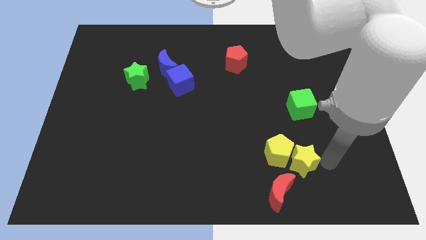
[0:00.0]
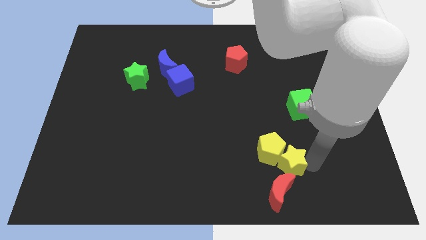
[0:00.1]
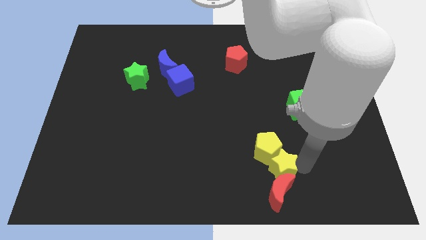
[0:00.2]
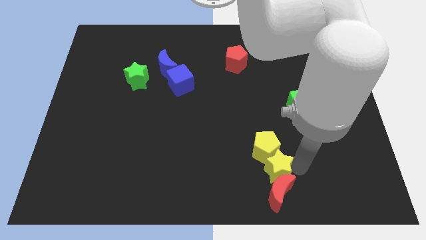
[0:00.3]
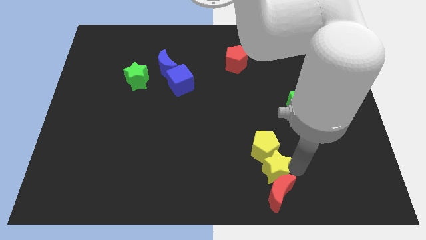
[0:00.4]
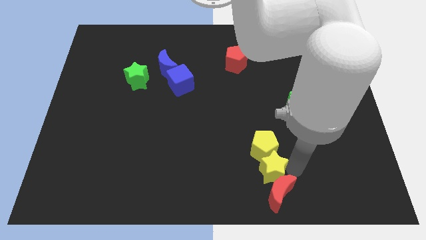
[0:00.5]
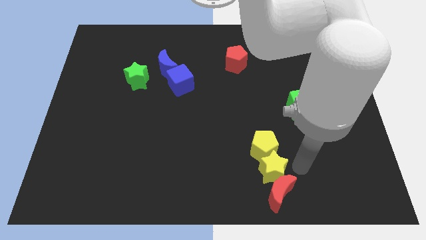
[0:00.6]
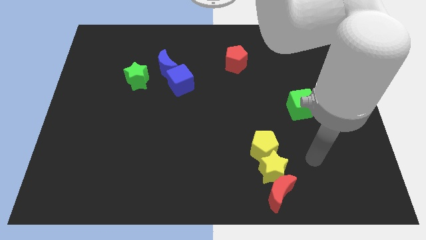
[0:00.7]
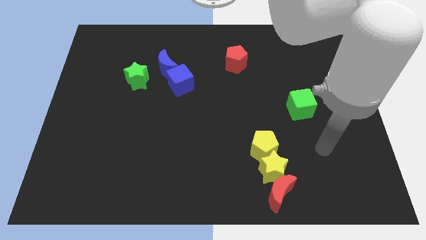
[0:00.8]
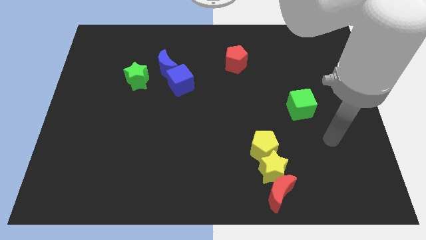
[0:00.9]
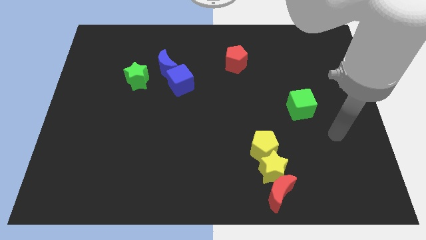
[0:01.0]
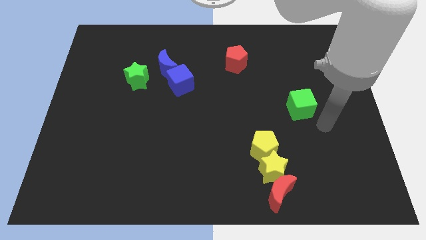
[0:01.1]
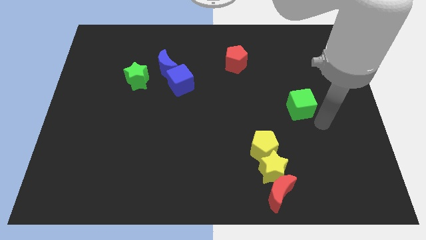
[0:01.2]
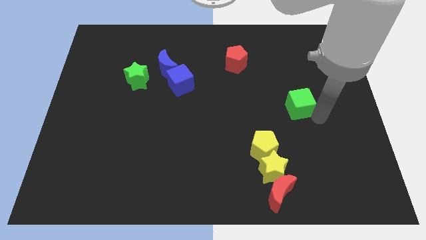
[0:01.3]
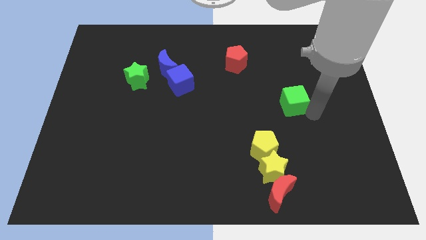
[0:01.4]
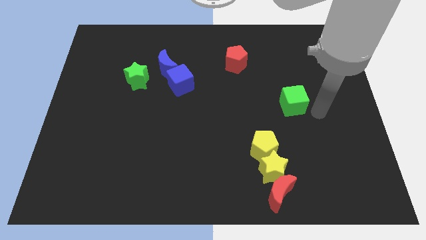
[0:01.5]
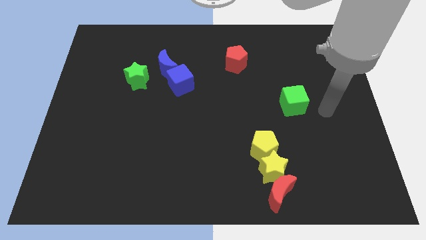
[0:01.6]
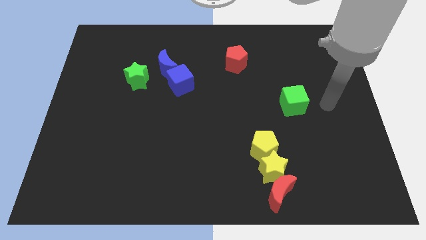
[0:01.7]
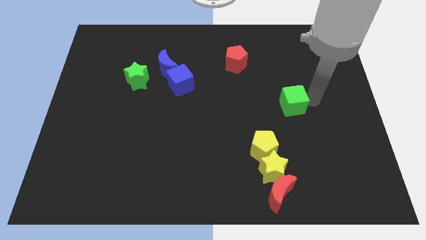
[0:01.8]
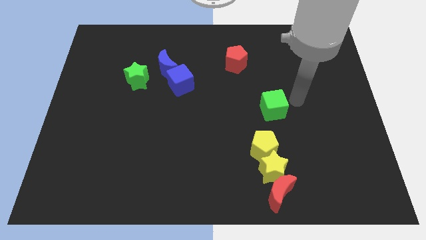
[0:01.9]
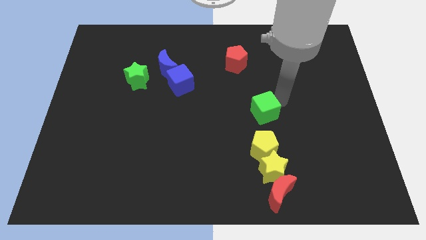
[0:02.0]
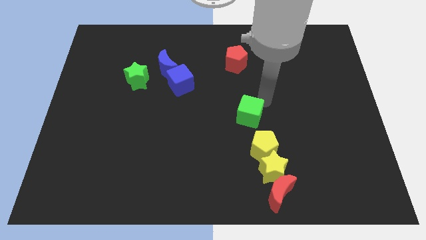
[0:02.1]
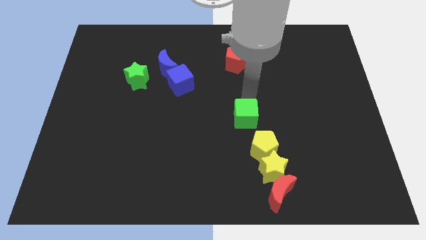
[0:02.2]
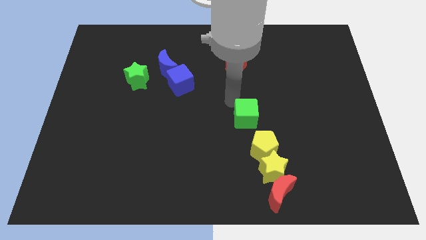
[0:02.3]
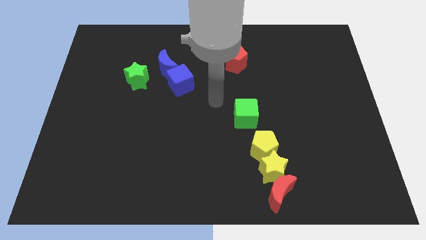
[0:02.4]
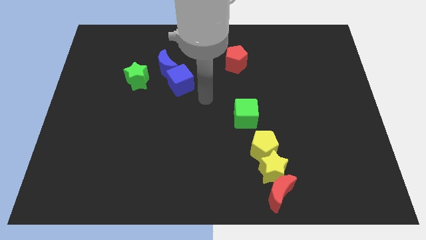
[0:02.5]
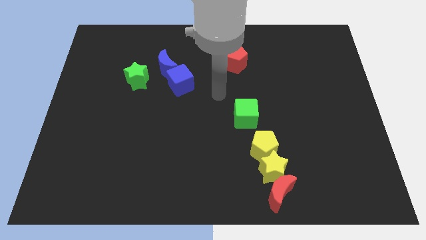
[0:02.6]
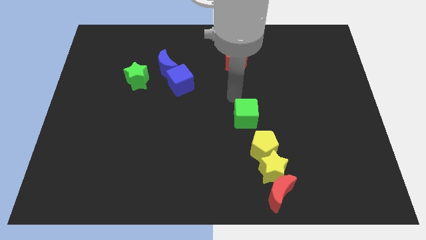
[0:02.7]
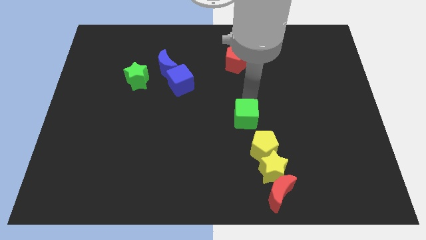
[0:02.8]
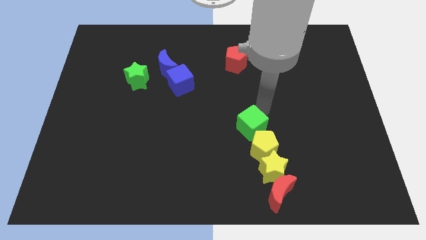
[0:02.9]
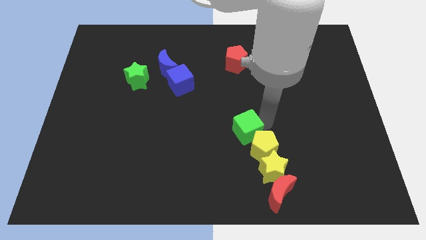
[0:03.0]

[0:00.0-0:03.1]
move the green cube above the yellow pentagon

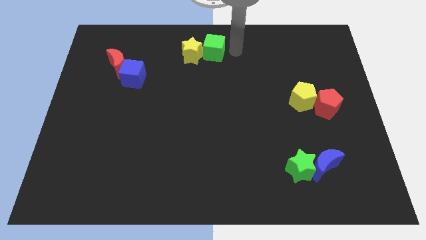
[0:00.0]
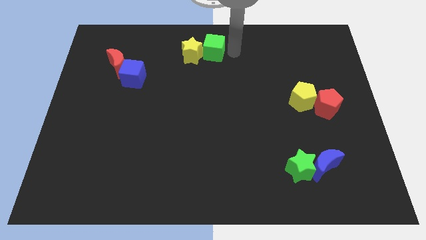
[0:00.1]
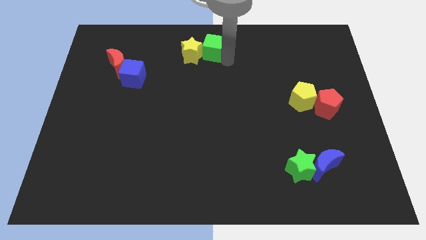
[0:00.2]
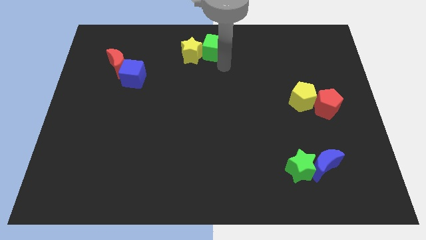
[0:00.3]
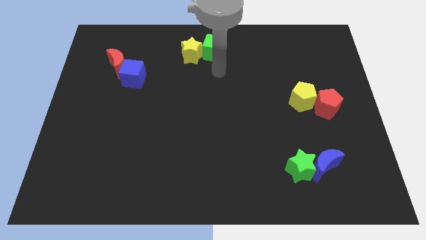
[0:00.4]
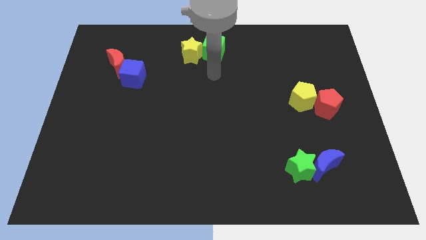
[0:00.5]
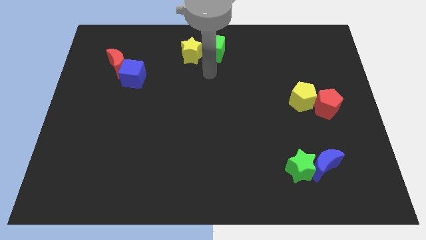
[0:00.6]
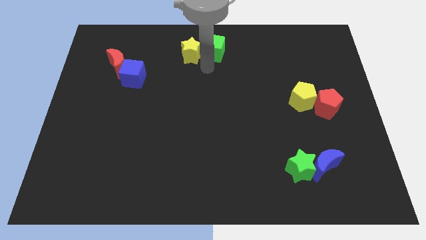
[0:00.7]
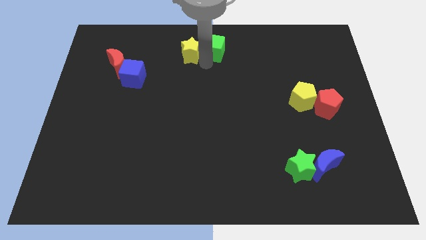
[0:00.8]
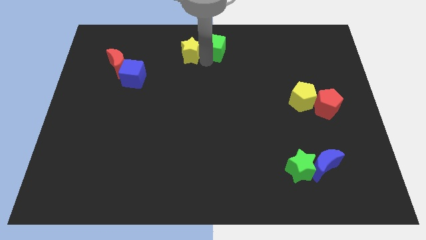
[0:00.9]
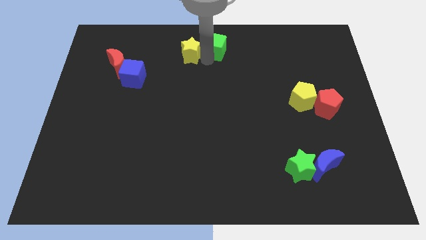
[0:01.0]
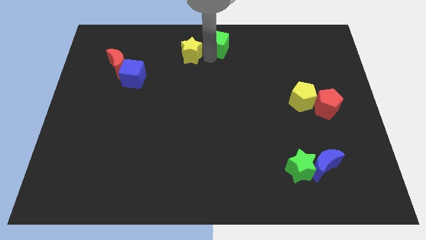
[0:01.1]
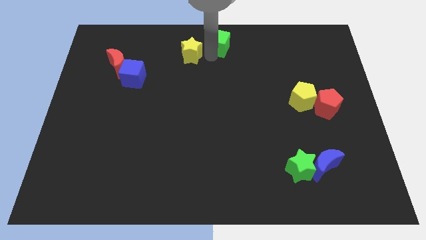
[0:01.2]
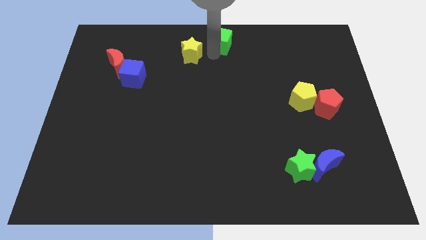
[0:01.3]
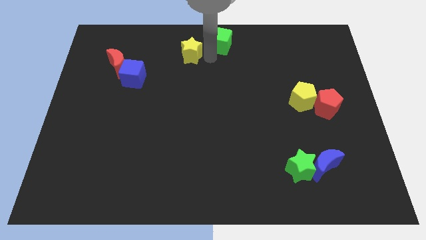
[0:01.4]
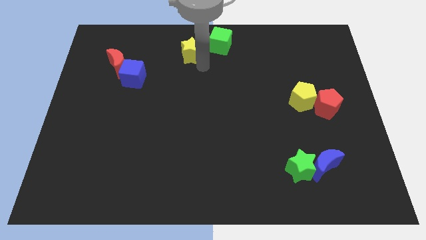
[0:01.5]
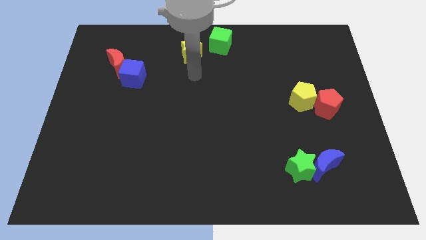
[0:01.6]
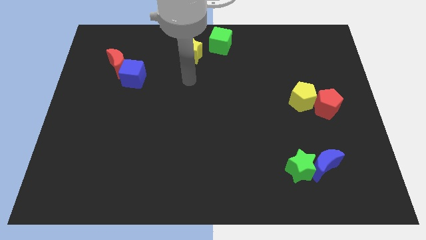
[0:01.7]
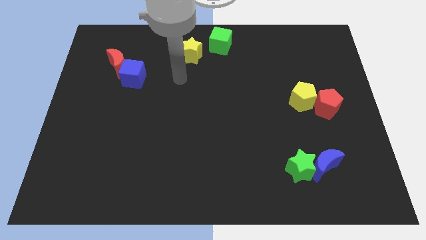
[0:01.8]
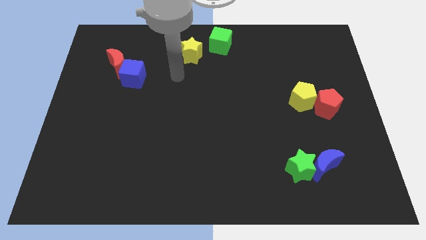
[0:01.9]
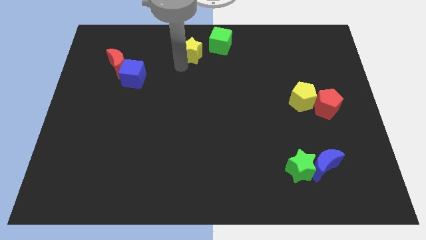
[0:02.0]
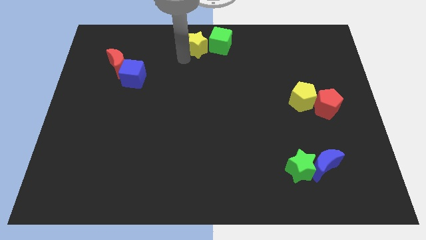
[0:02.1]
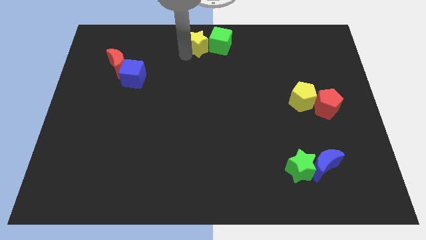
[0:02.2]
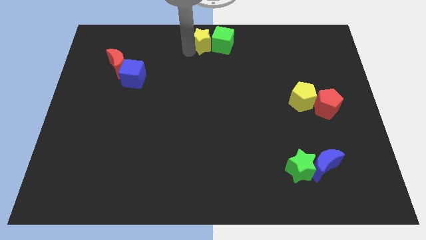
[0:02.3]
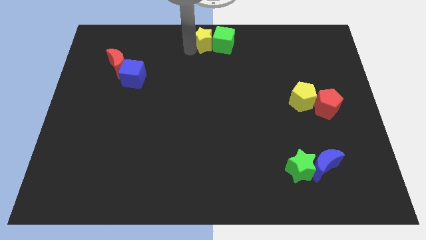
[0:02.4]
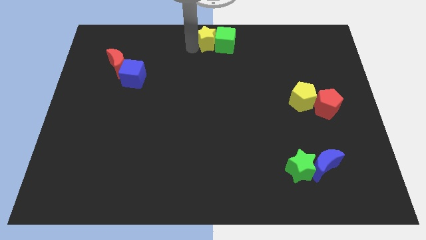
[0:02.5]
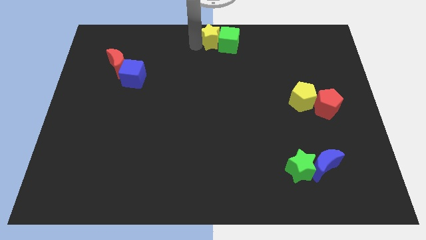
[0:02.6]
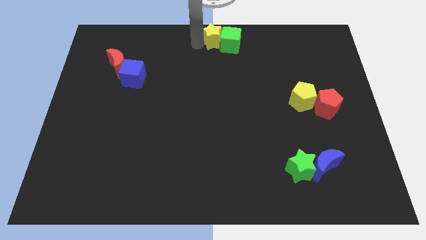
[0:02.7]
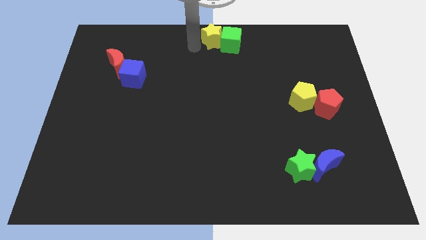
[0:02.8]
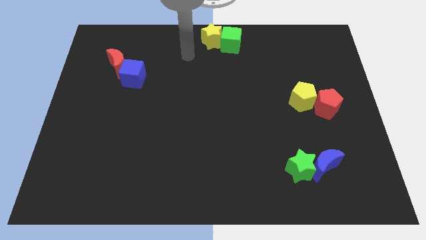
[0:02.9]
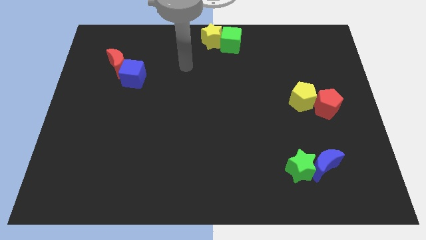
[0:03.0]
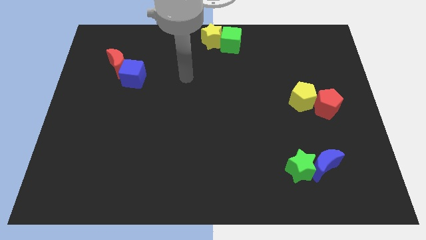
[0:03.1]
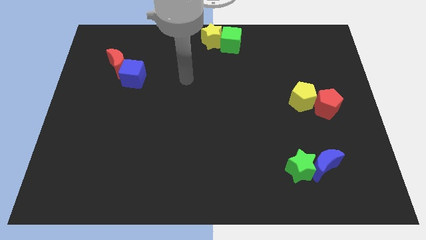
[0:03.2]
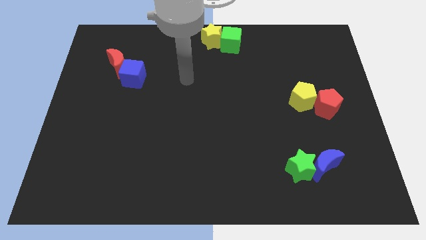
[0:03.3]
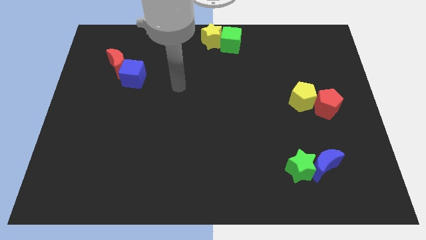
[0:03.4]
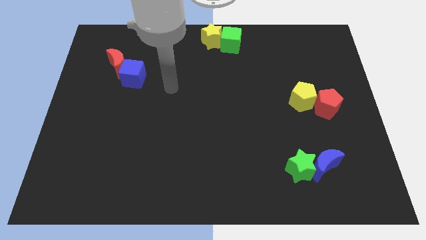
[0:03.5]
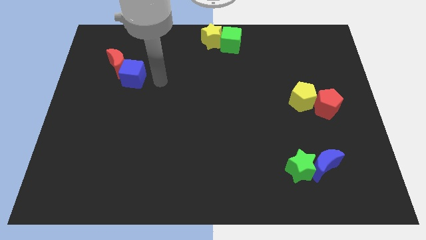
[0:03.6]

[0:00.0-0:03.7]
place the green cube and the yellow star at the top center of the board

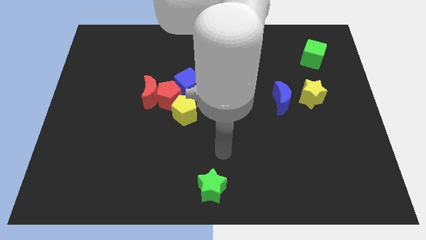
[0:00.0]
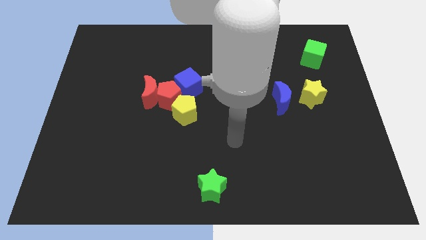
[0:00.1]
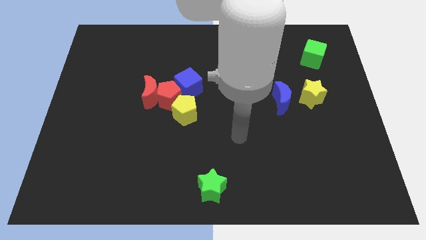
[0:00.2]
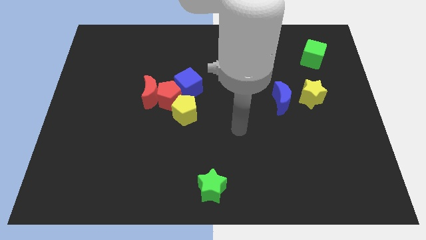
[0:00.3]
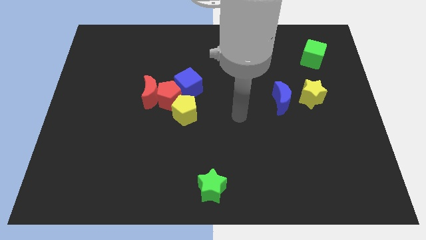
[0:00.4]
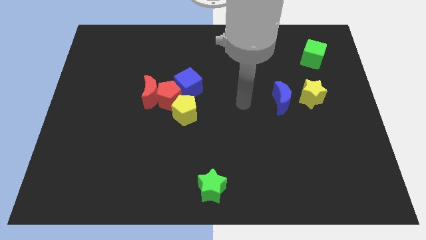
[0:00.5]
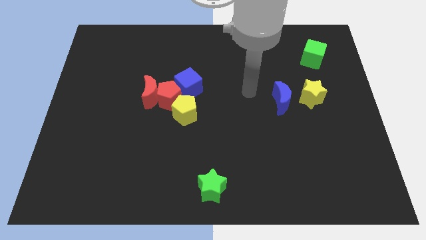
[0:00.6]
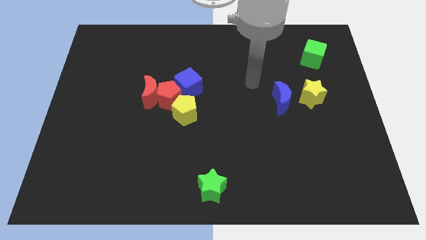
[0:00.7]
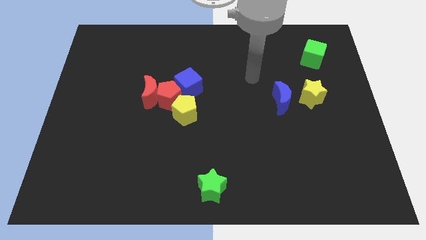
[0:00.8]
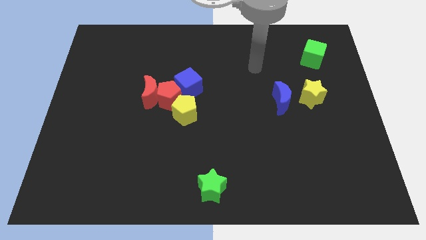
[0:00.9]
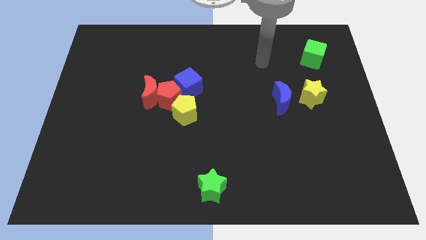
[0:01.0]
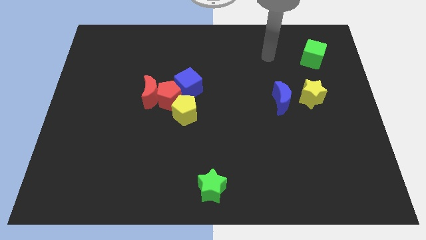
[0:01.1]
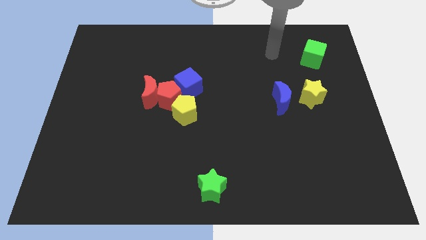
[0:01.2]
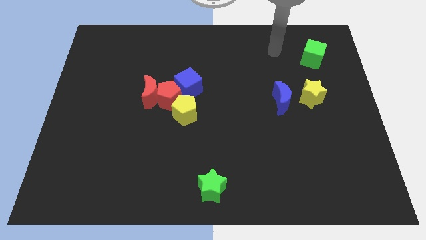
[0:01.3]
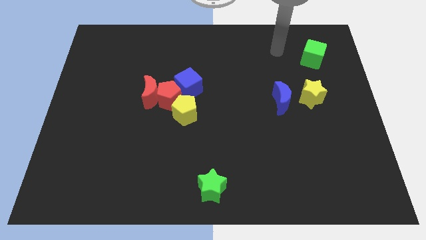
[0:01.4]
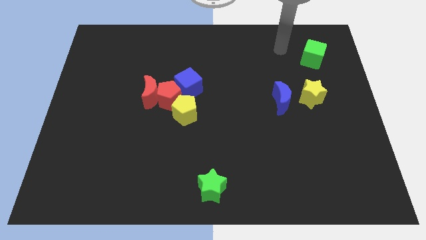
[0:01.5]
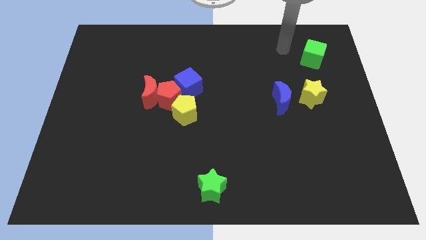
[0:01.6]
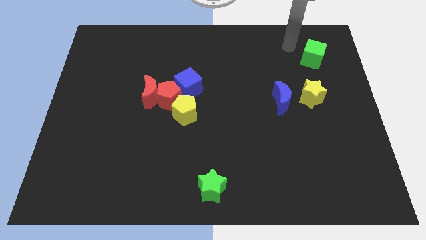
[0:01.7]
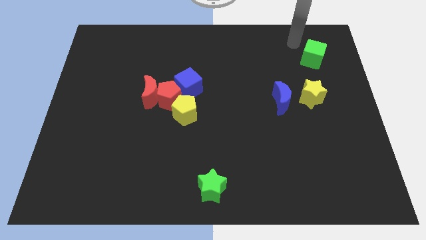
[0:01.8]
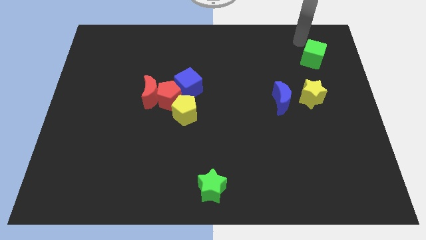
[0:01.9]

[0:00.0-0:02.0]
point your arm diagonal to the green cube

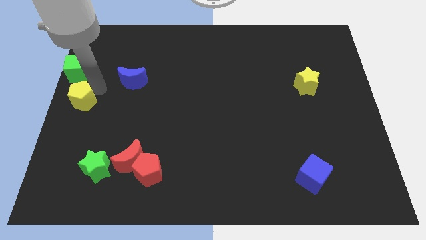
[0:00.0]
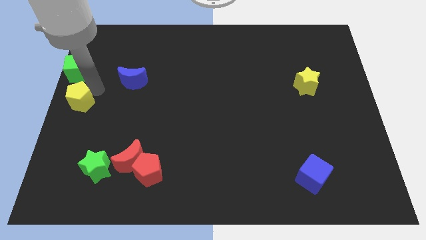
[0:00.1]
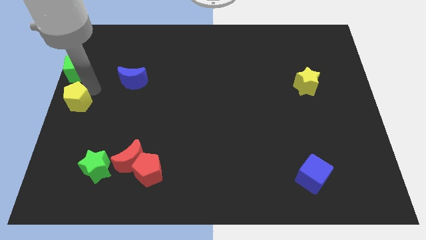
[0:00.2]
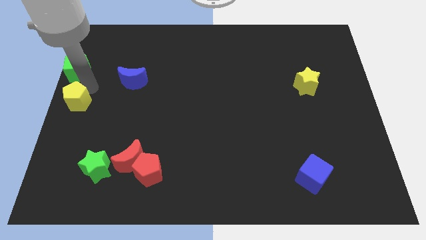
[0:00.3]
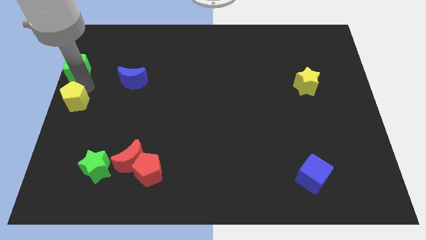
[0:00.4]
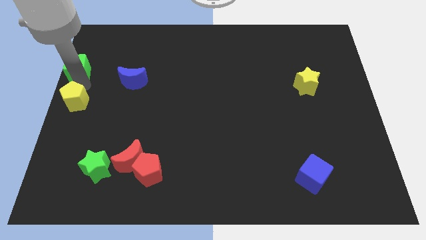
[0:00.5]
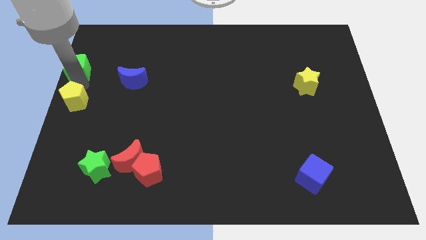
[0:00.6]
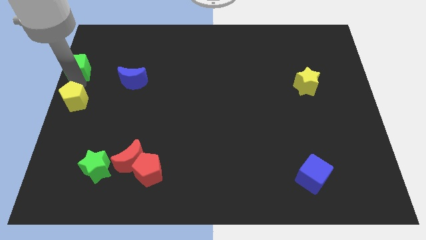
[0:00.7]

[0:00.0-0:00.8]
slightly move the yellow pentagon to the left
